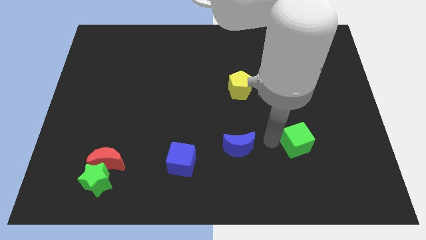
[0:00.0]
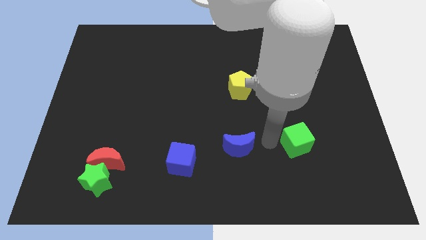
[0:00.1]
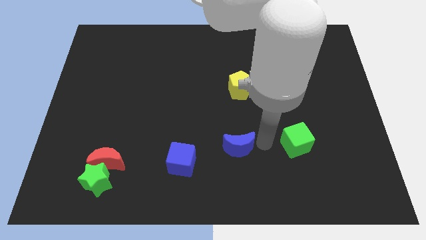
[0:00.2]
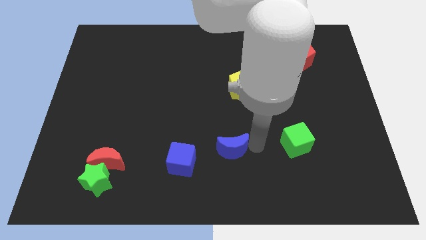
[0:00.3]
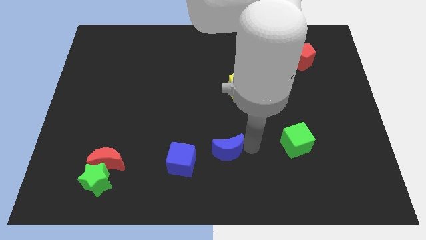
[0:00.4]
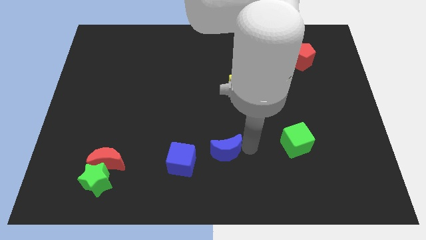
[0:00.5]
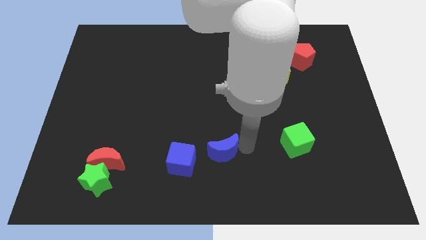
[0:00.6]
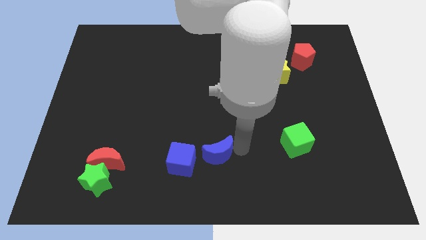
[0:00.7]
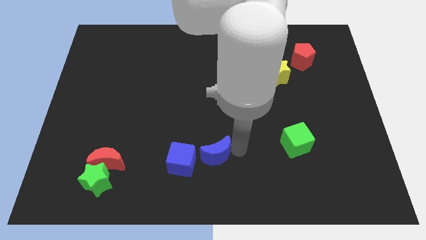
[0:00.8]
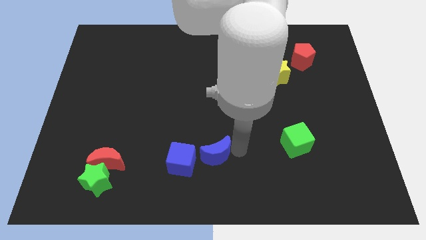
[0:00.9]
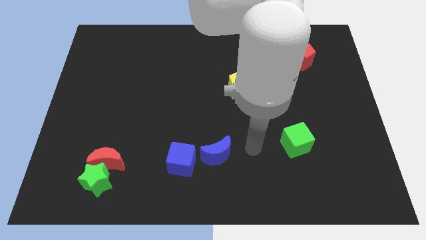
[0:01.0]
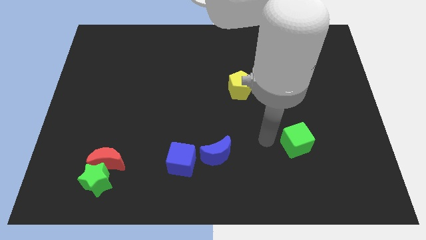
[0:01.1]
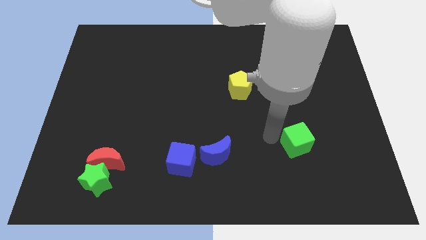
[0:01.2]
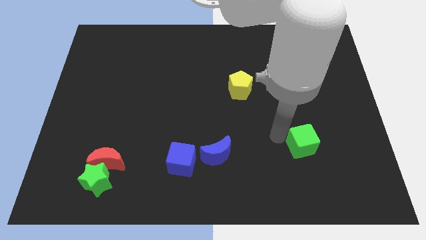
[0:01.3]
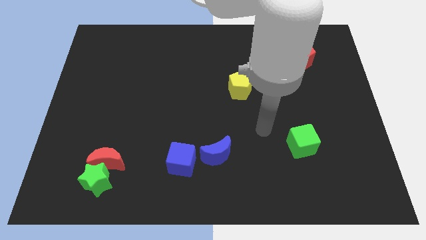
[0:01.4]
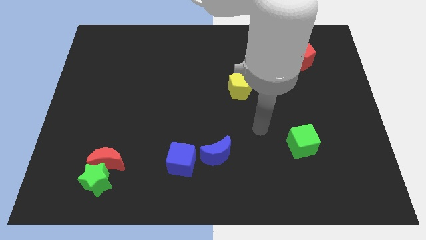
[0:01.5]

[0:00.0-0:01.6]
move the blue moon right beside the blue cube

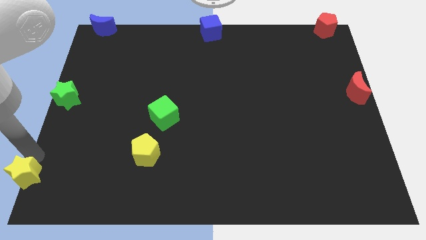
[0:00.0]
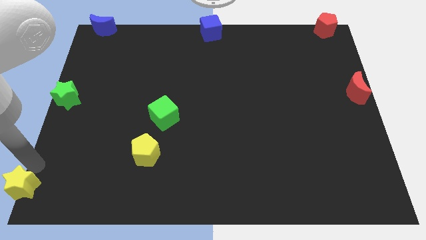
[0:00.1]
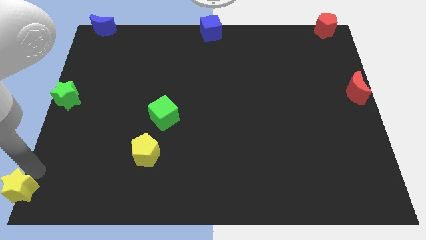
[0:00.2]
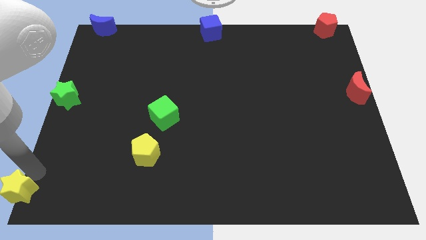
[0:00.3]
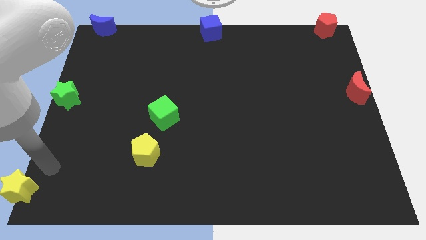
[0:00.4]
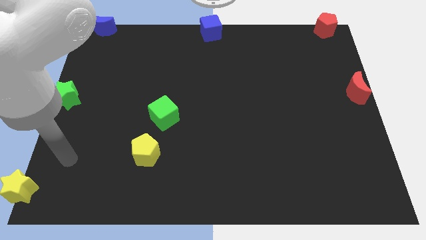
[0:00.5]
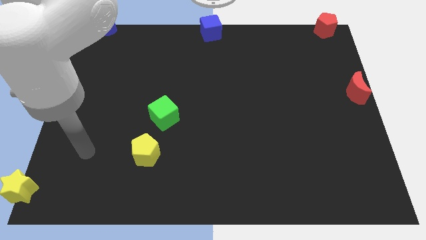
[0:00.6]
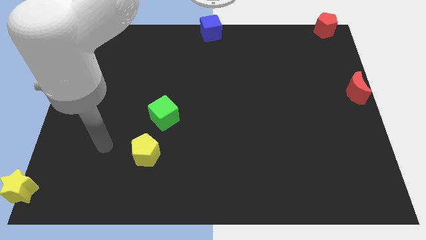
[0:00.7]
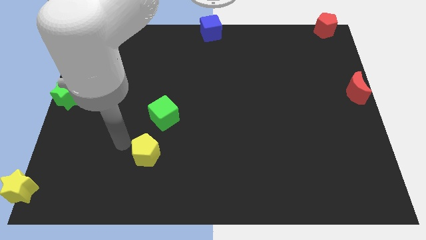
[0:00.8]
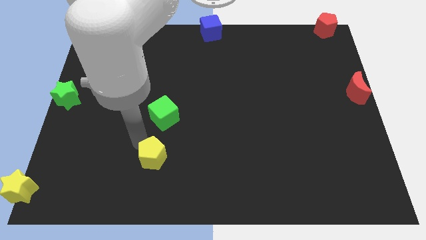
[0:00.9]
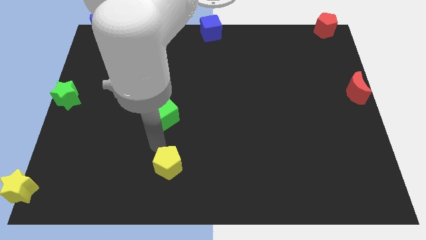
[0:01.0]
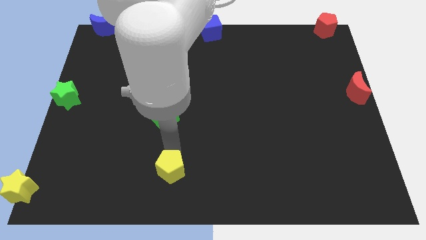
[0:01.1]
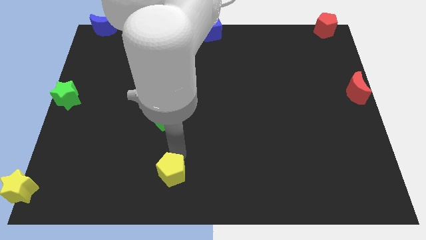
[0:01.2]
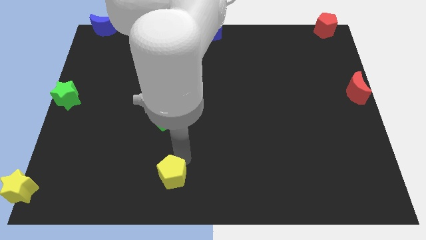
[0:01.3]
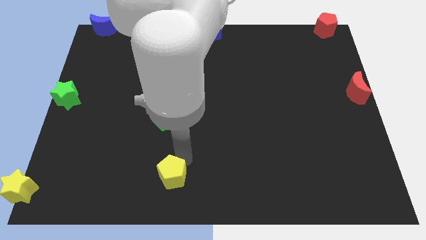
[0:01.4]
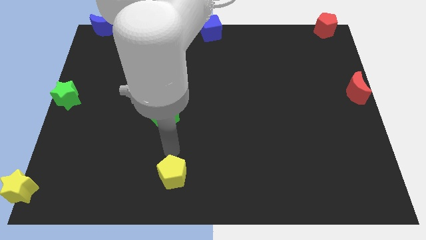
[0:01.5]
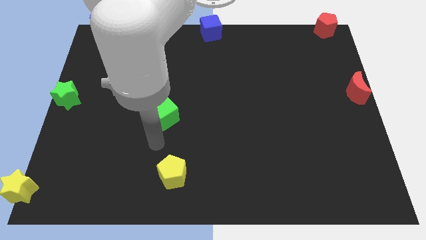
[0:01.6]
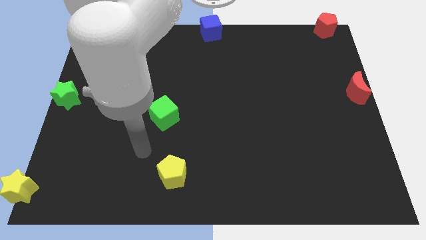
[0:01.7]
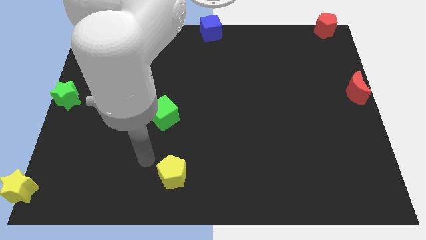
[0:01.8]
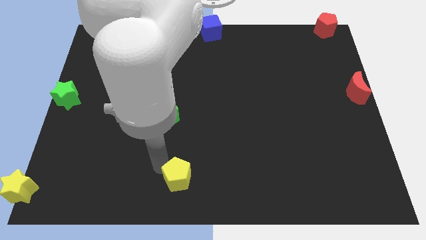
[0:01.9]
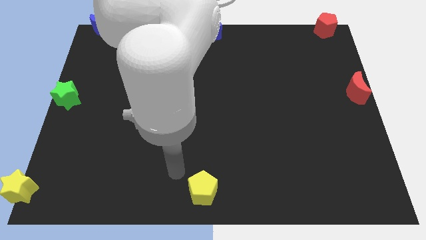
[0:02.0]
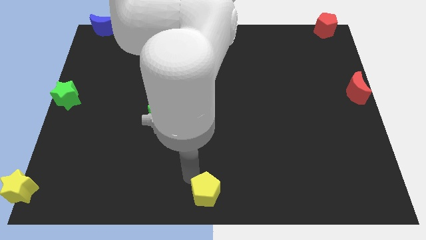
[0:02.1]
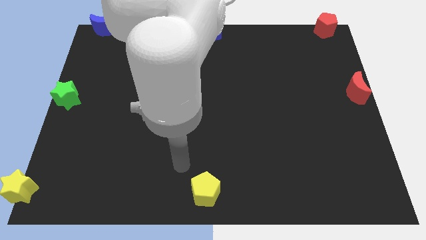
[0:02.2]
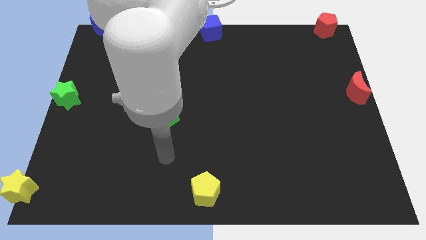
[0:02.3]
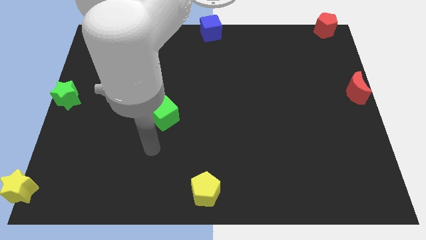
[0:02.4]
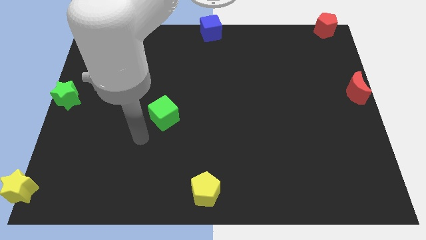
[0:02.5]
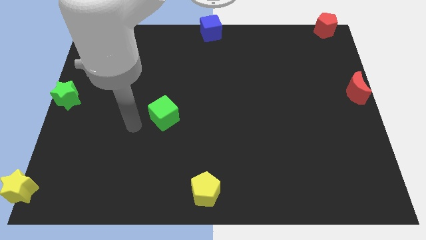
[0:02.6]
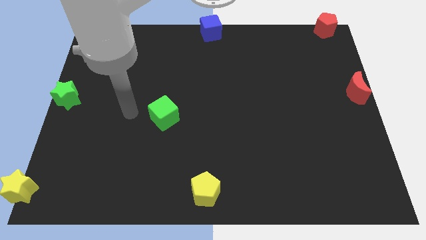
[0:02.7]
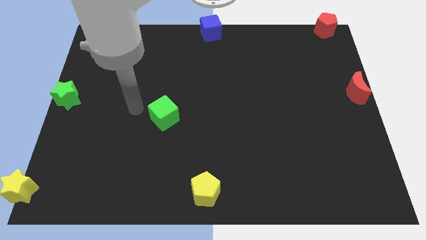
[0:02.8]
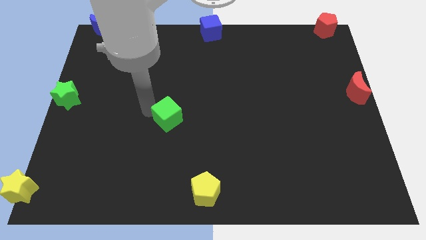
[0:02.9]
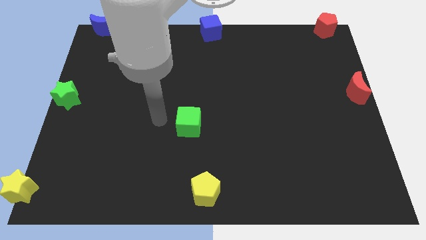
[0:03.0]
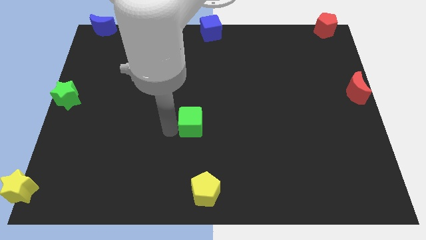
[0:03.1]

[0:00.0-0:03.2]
place the yellow pentagon to the bottom center

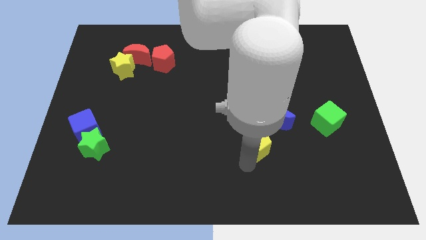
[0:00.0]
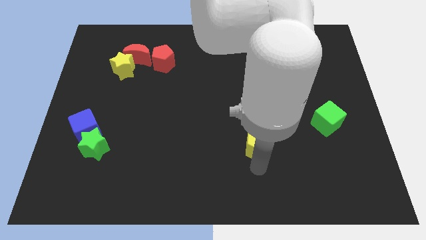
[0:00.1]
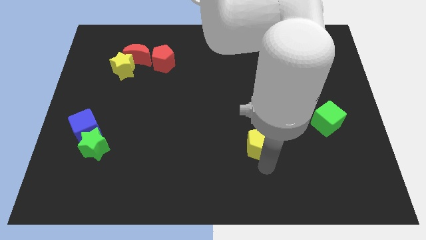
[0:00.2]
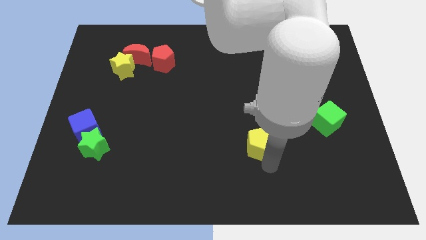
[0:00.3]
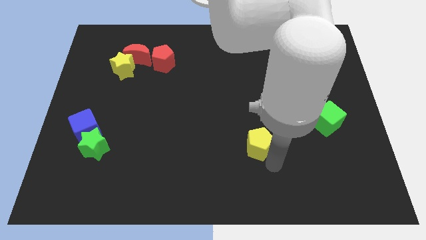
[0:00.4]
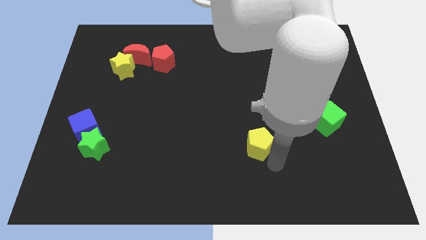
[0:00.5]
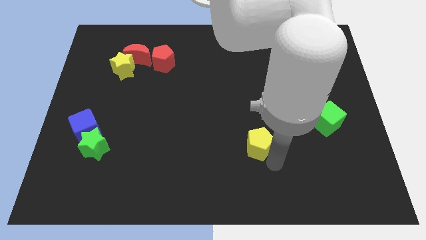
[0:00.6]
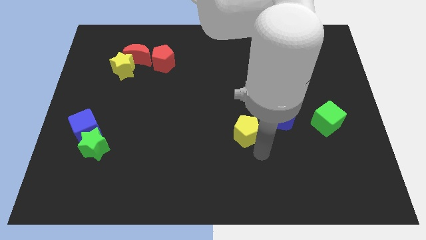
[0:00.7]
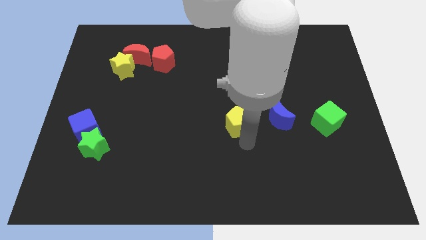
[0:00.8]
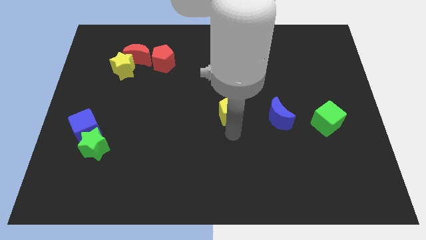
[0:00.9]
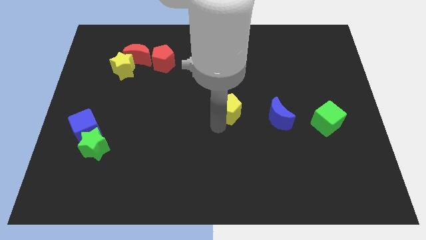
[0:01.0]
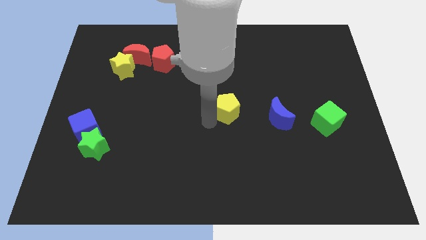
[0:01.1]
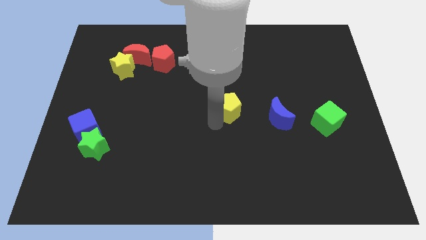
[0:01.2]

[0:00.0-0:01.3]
put the yellow pentagon horizontally left to the blue moon

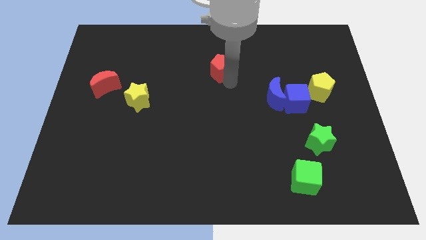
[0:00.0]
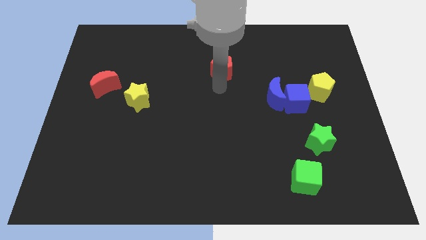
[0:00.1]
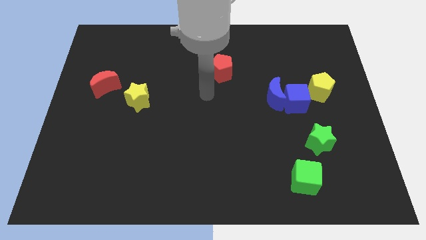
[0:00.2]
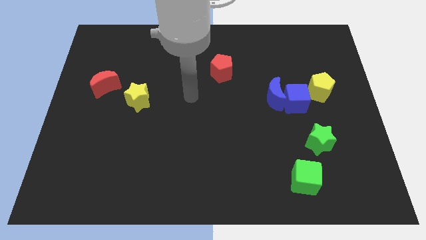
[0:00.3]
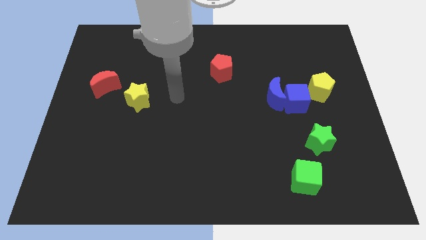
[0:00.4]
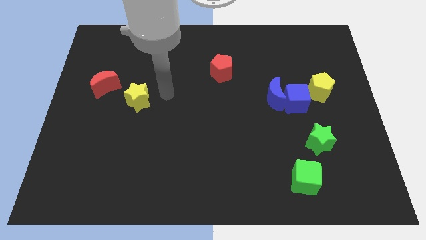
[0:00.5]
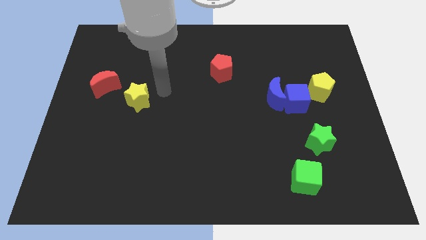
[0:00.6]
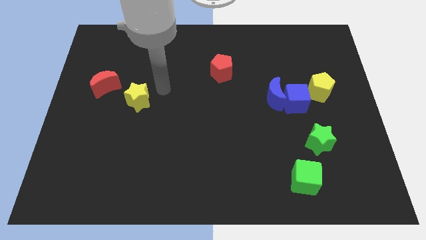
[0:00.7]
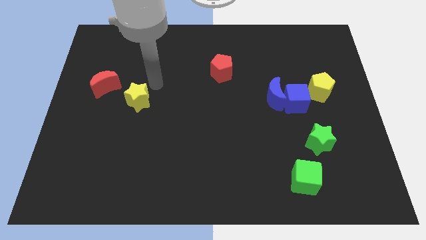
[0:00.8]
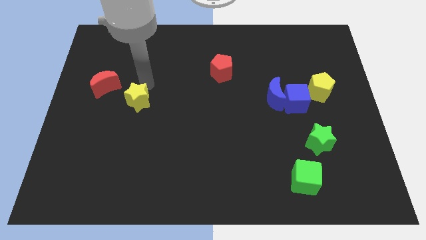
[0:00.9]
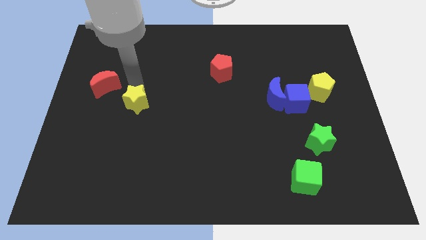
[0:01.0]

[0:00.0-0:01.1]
place the arm above the yellow star

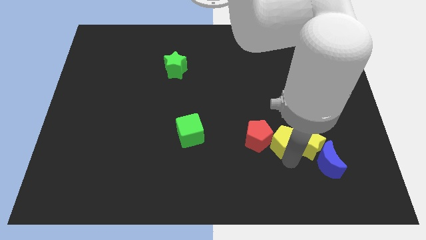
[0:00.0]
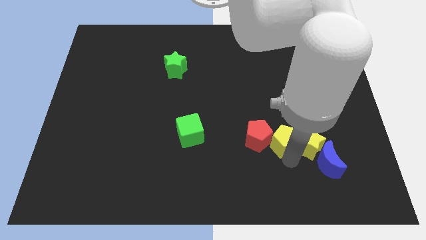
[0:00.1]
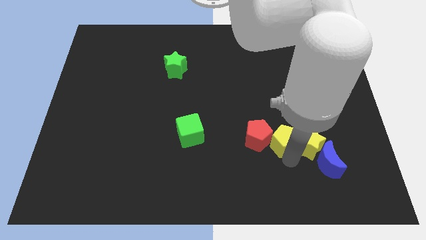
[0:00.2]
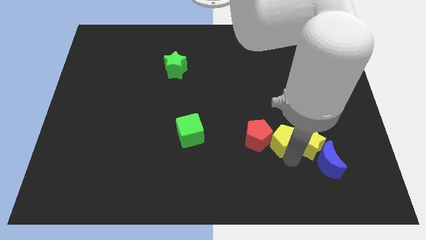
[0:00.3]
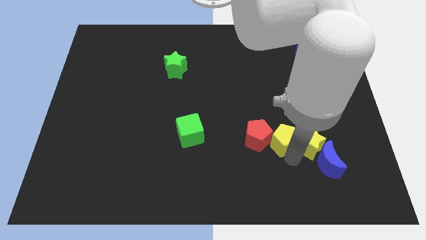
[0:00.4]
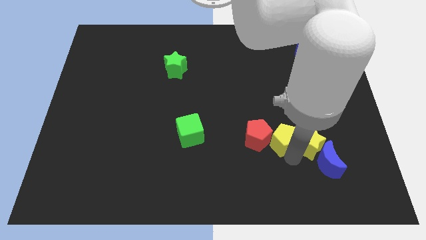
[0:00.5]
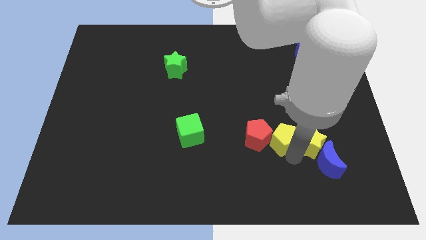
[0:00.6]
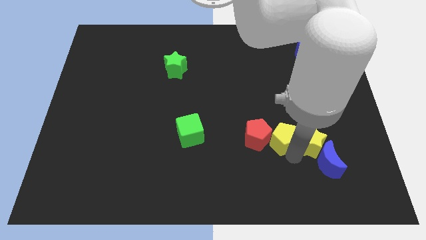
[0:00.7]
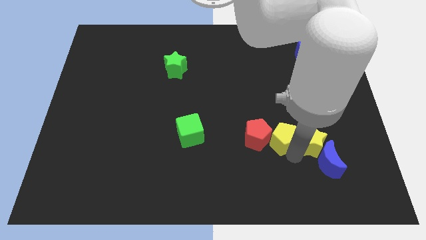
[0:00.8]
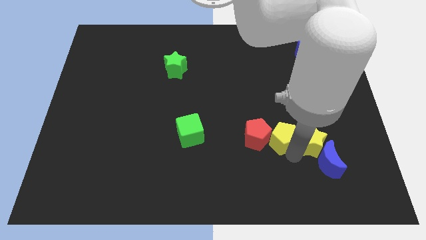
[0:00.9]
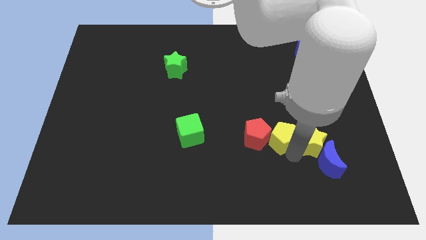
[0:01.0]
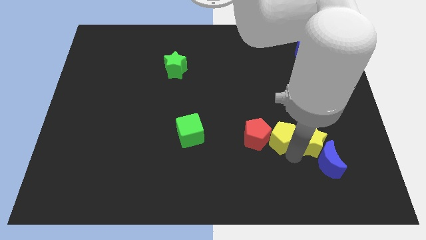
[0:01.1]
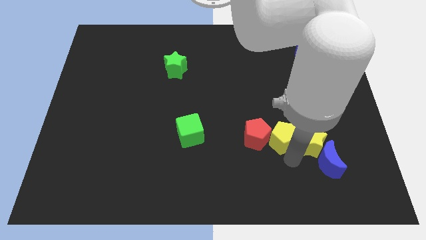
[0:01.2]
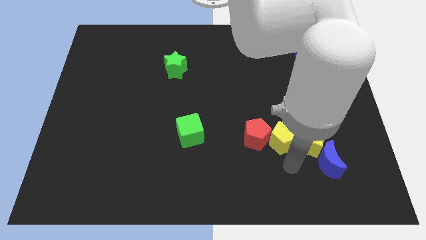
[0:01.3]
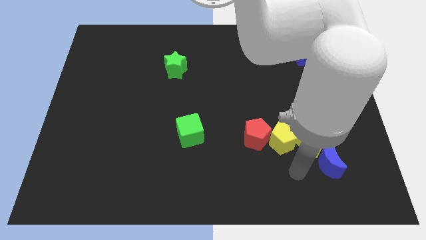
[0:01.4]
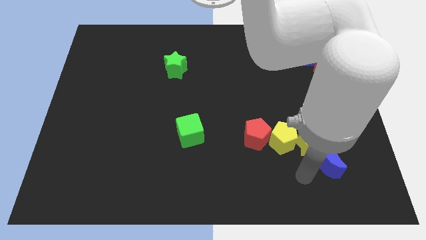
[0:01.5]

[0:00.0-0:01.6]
adjust yellow blocks in between the red pentagon and the blue crescent

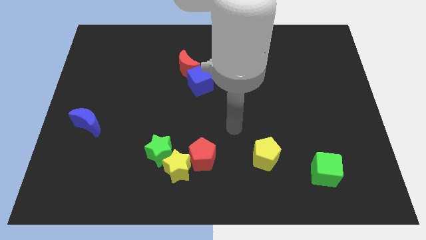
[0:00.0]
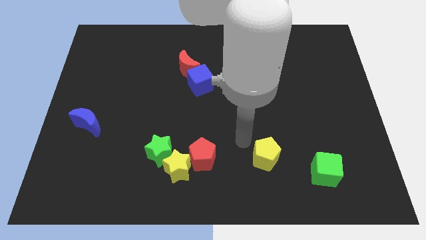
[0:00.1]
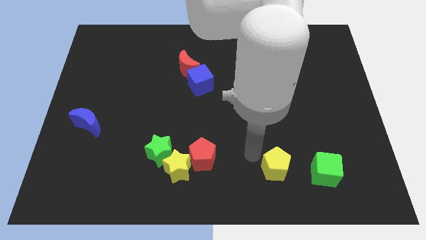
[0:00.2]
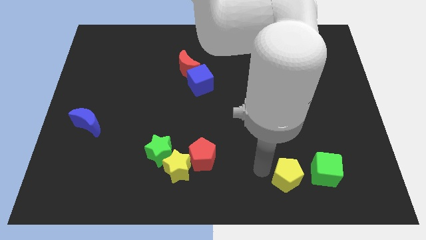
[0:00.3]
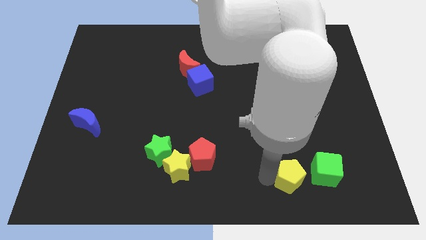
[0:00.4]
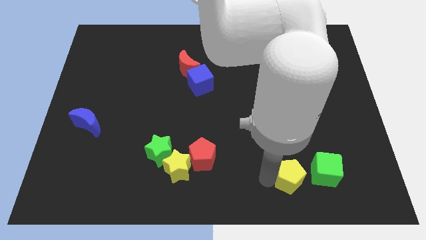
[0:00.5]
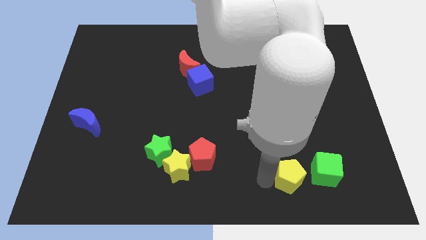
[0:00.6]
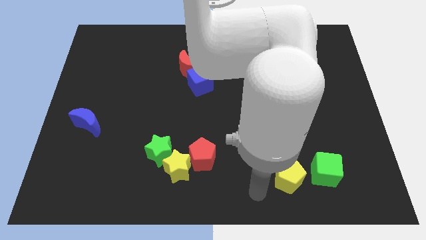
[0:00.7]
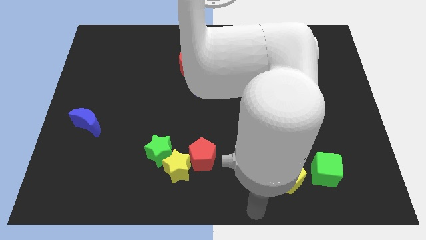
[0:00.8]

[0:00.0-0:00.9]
move yellow pentagon left beside the green cube
